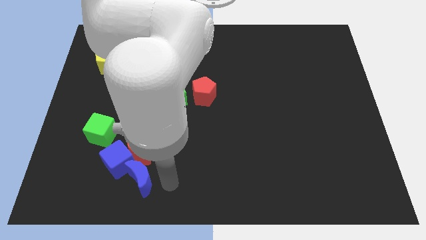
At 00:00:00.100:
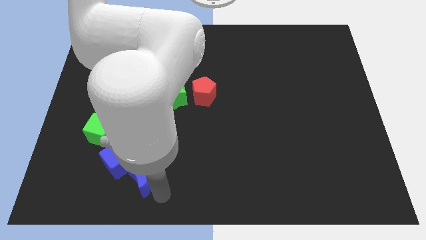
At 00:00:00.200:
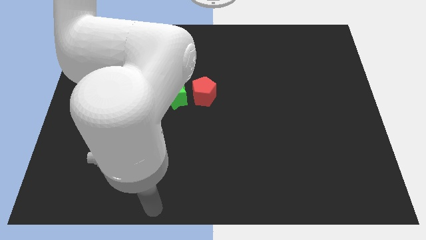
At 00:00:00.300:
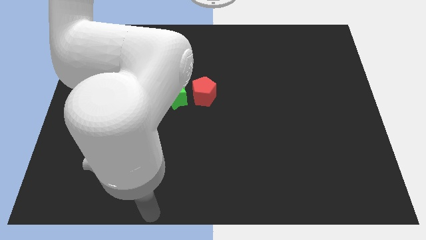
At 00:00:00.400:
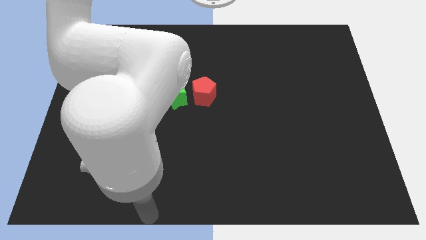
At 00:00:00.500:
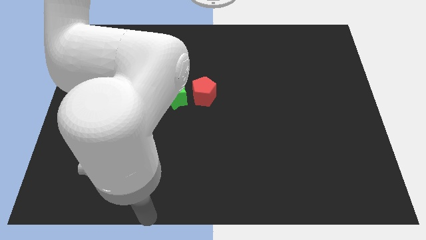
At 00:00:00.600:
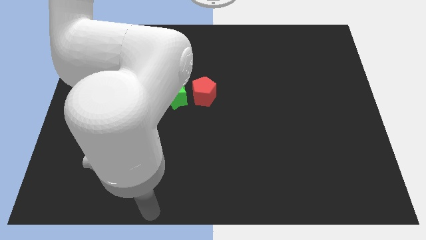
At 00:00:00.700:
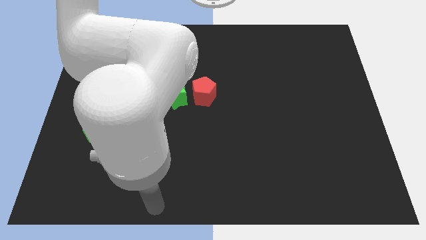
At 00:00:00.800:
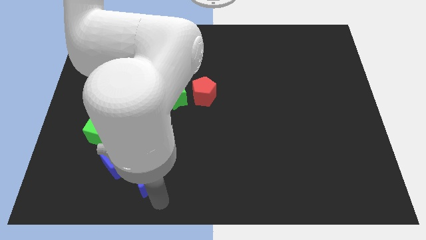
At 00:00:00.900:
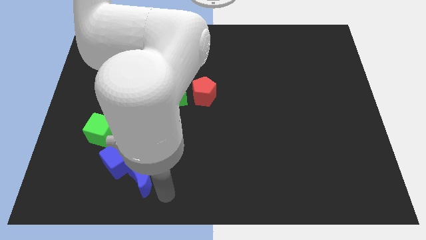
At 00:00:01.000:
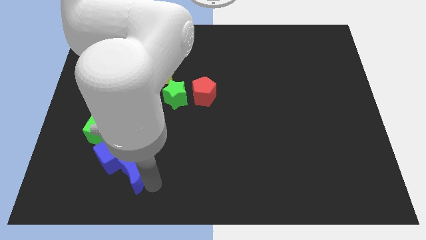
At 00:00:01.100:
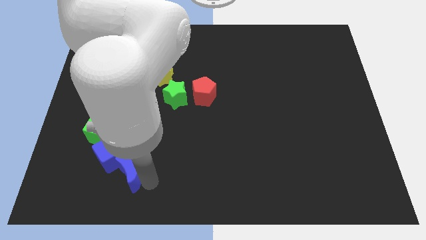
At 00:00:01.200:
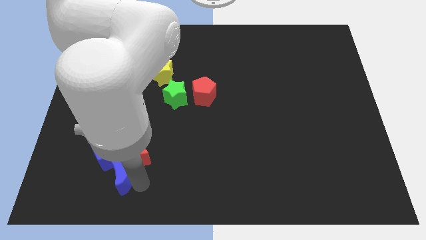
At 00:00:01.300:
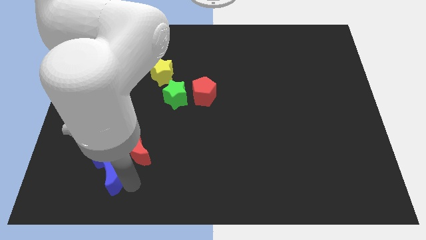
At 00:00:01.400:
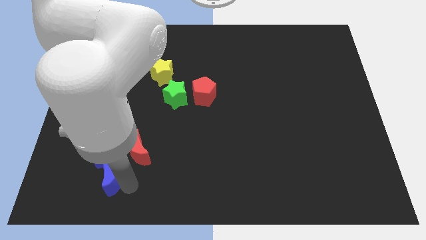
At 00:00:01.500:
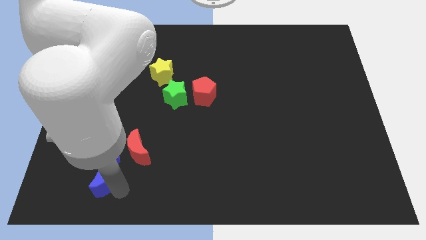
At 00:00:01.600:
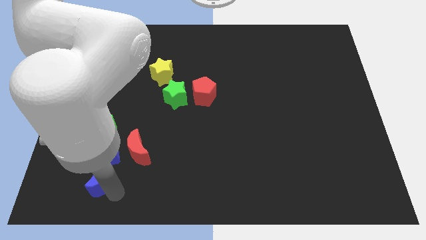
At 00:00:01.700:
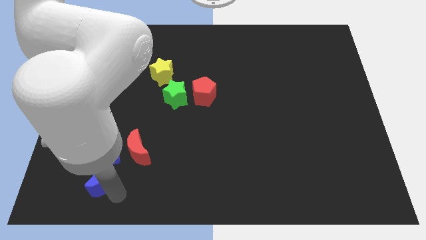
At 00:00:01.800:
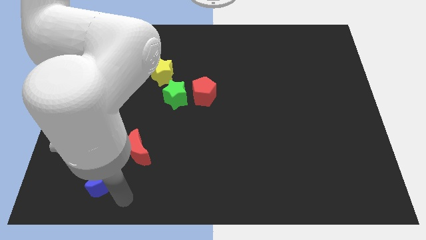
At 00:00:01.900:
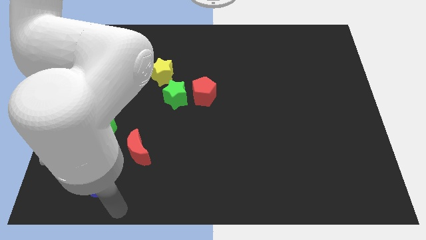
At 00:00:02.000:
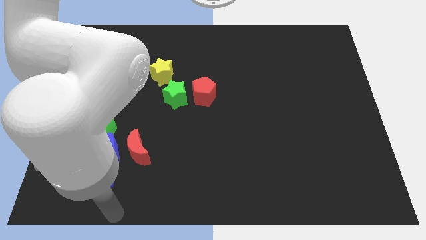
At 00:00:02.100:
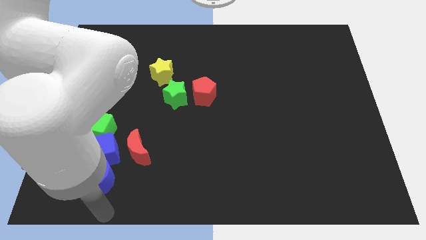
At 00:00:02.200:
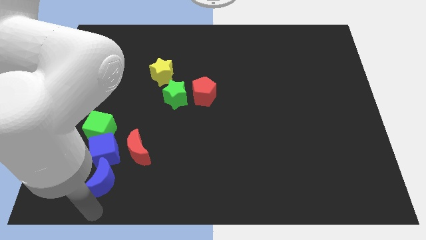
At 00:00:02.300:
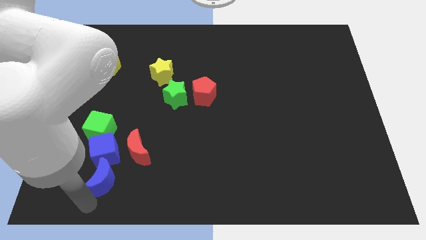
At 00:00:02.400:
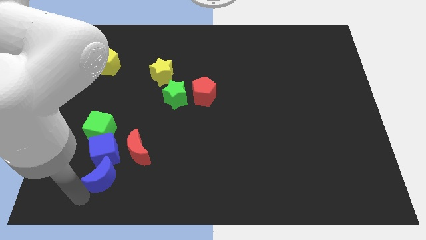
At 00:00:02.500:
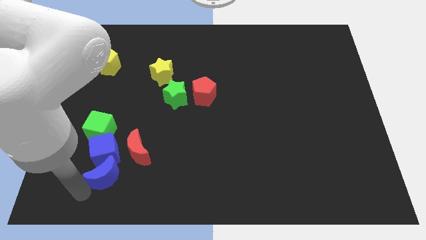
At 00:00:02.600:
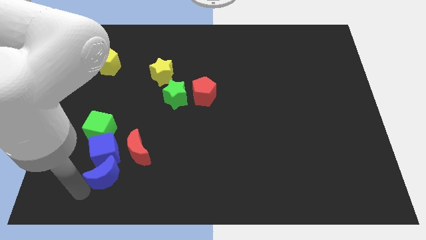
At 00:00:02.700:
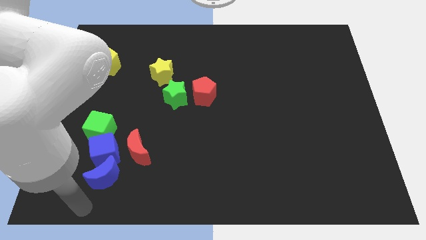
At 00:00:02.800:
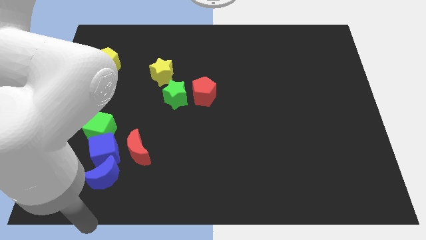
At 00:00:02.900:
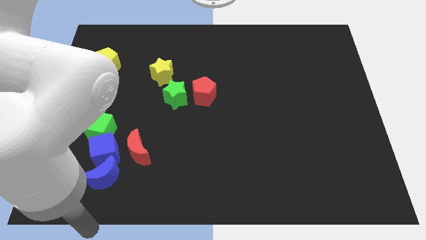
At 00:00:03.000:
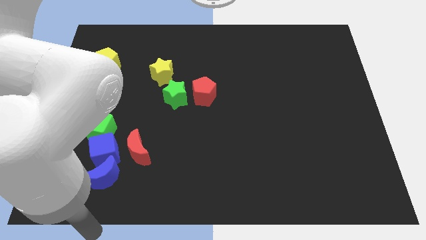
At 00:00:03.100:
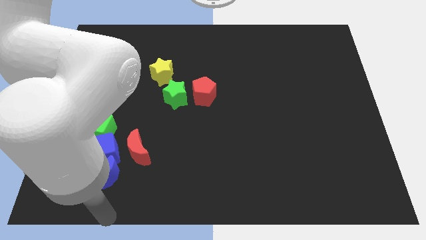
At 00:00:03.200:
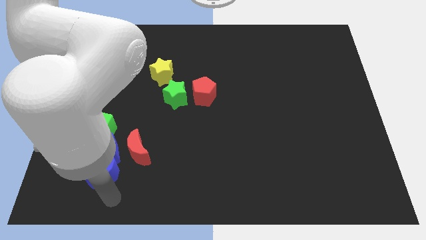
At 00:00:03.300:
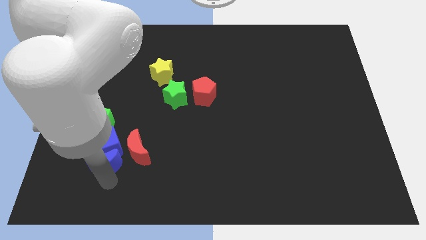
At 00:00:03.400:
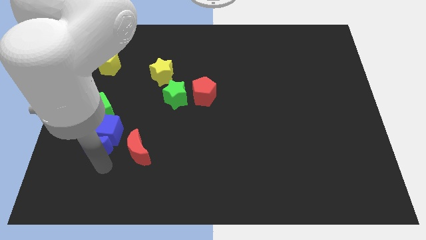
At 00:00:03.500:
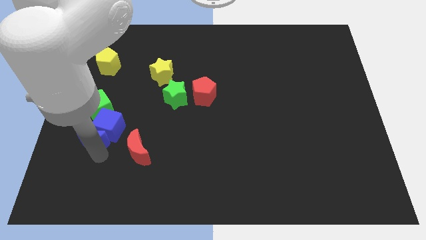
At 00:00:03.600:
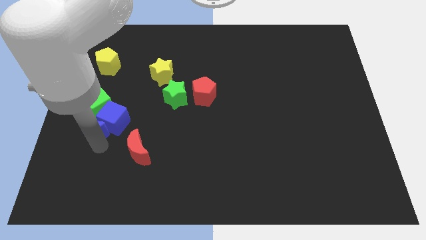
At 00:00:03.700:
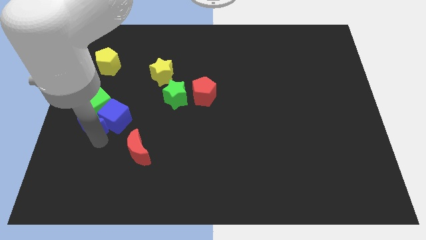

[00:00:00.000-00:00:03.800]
push the green cube and the blue cube with the blue crescent towards the left center of the board

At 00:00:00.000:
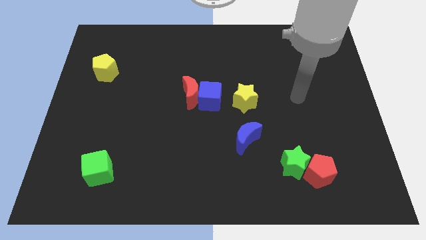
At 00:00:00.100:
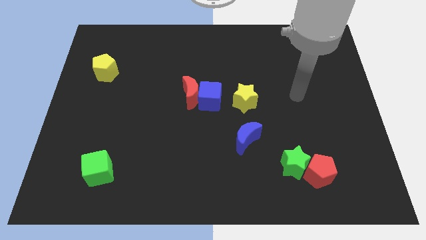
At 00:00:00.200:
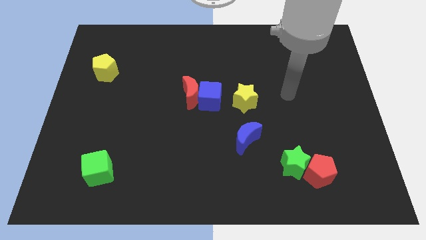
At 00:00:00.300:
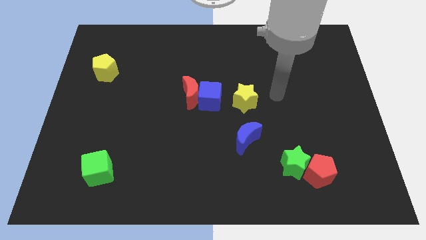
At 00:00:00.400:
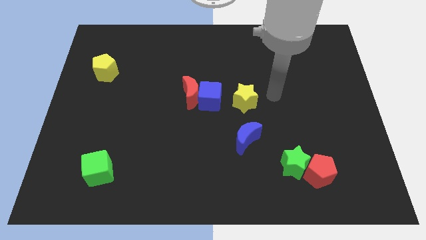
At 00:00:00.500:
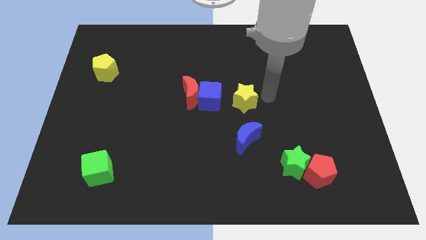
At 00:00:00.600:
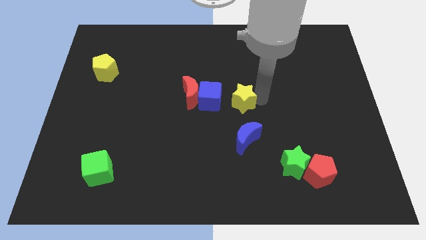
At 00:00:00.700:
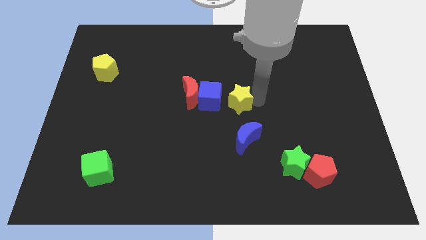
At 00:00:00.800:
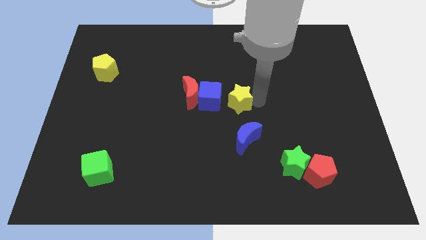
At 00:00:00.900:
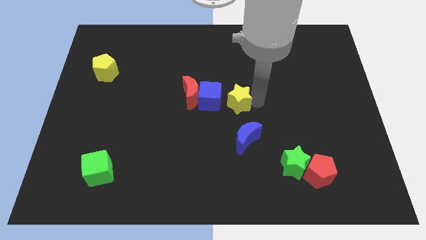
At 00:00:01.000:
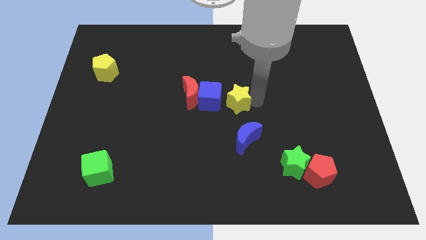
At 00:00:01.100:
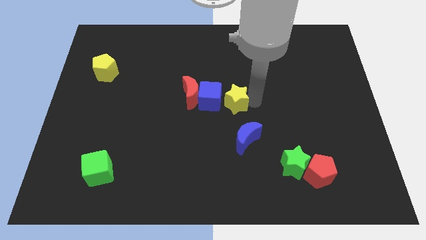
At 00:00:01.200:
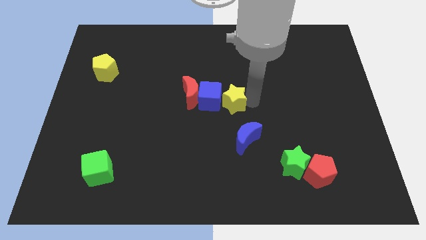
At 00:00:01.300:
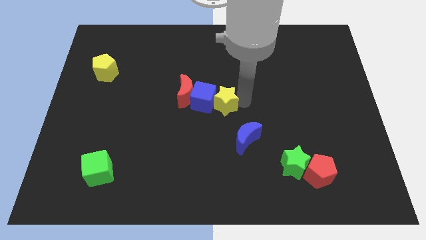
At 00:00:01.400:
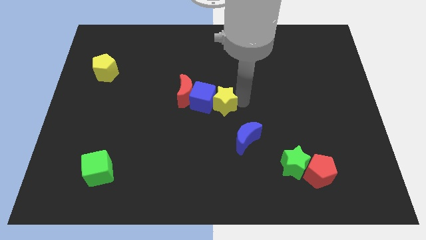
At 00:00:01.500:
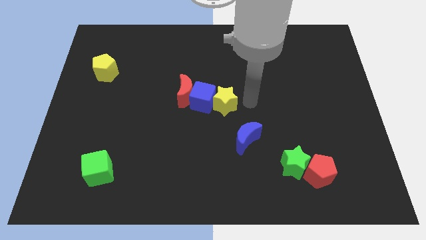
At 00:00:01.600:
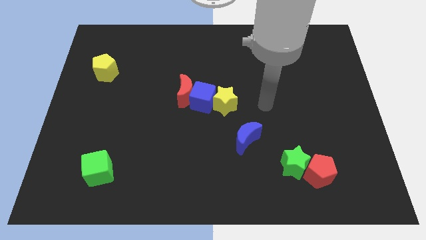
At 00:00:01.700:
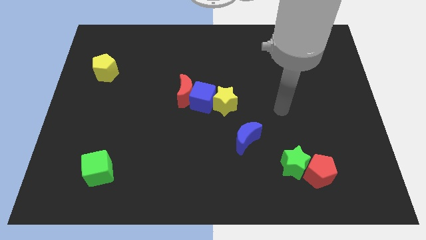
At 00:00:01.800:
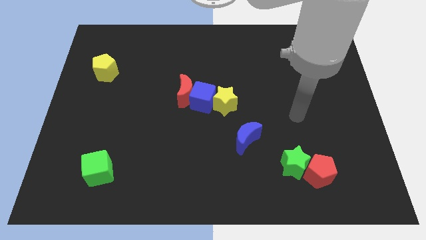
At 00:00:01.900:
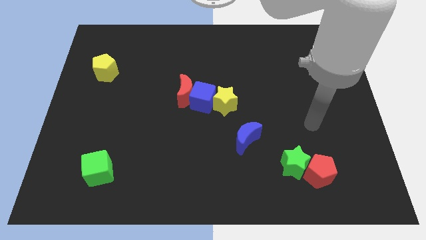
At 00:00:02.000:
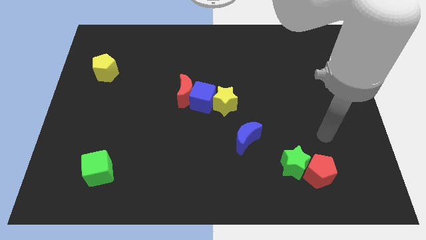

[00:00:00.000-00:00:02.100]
push yellow star into blue cube

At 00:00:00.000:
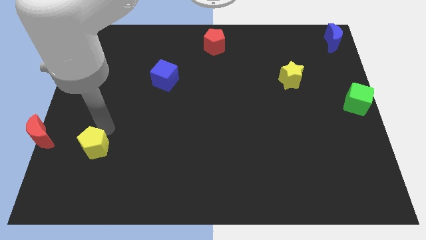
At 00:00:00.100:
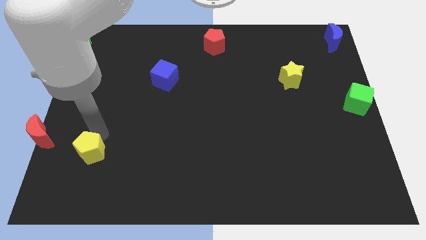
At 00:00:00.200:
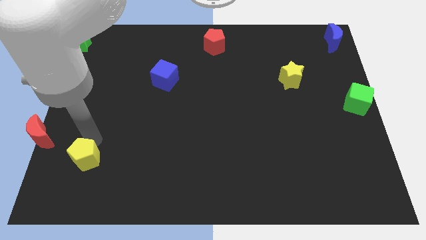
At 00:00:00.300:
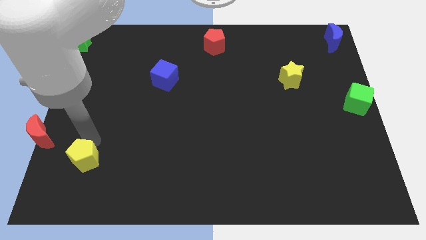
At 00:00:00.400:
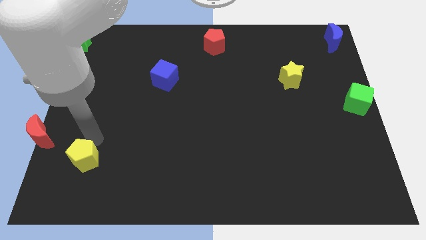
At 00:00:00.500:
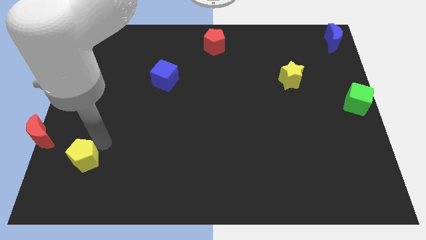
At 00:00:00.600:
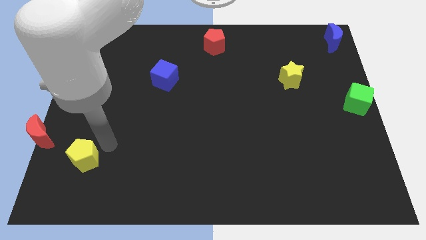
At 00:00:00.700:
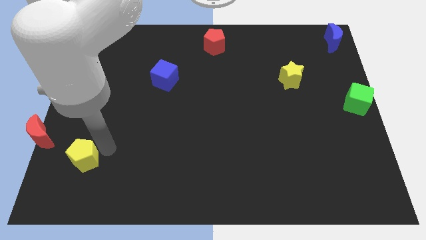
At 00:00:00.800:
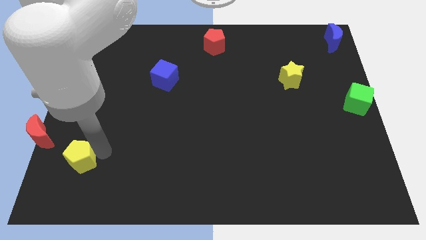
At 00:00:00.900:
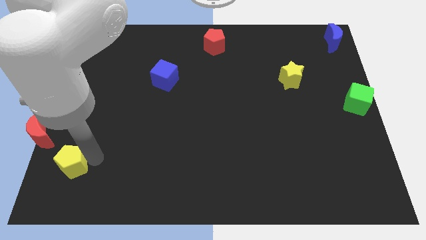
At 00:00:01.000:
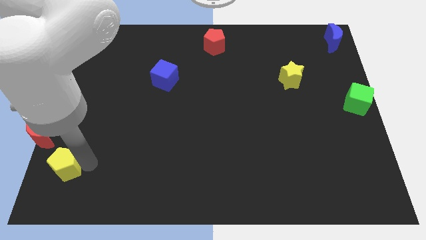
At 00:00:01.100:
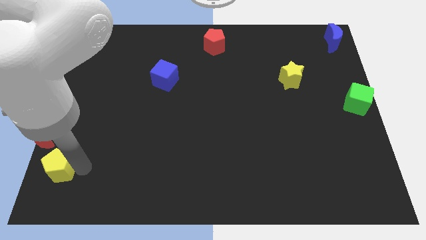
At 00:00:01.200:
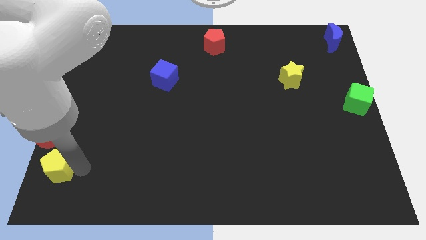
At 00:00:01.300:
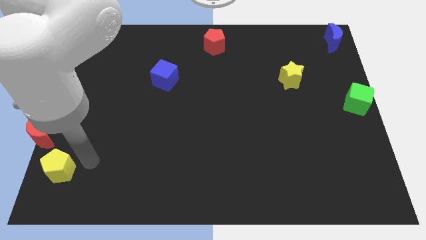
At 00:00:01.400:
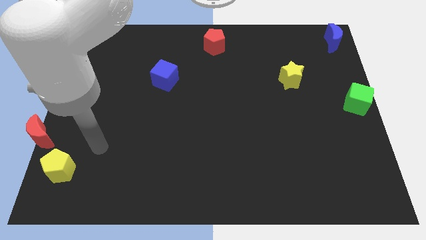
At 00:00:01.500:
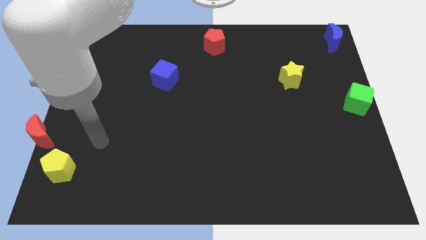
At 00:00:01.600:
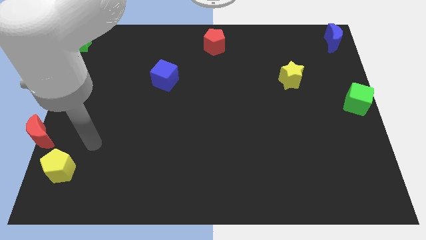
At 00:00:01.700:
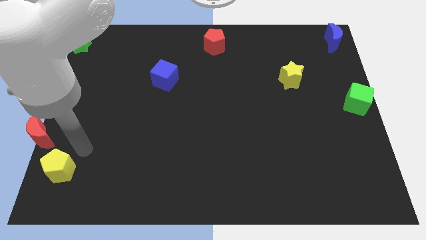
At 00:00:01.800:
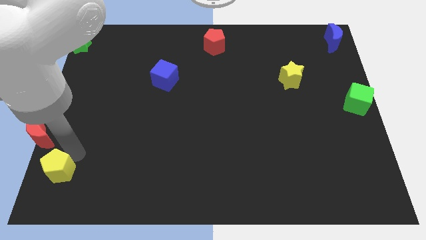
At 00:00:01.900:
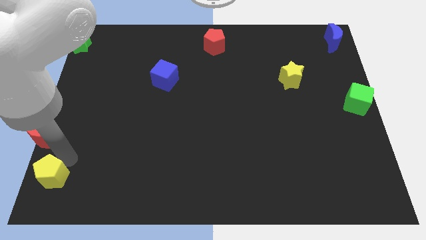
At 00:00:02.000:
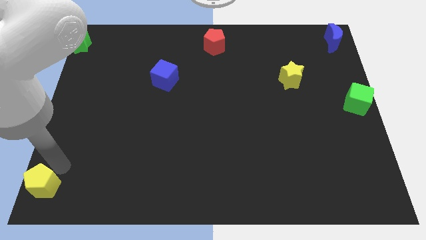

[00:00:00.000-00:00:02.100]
move yellow pentagon towards the bottom left corner of the board

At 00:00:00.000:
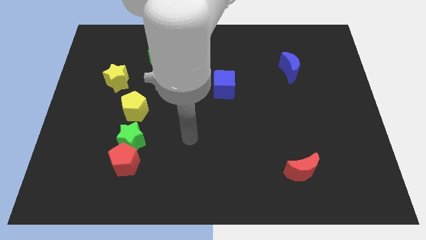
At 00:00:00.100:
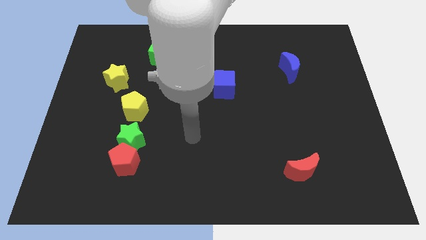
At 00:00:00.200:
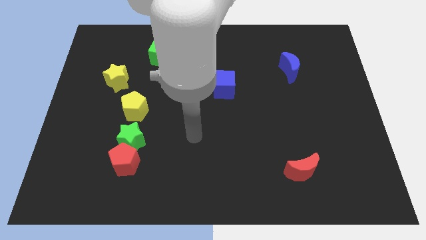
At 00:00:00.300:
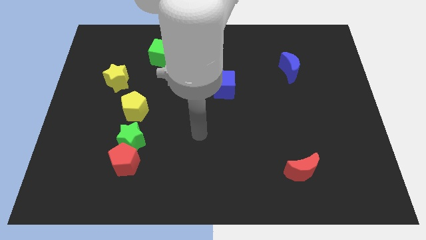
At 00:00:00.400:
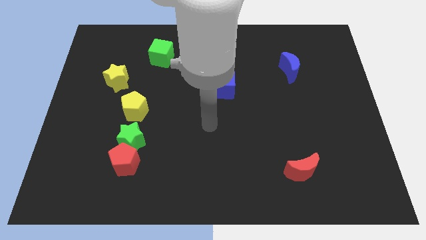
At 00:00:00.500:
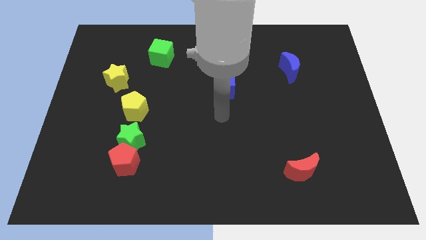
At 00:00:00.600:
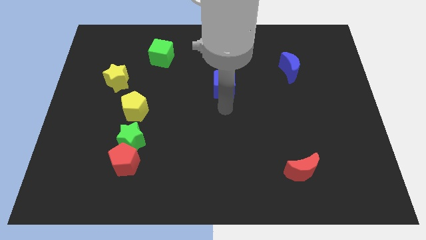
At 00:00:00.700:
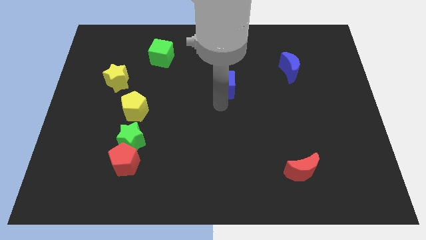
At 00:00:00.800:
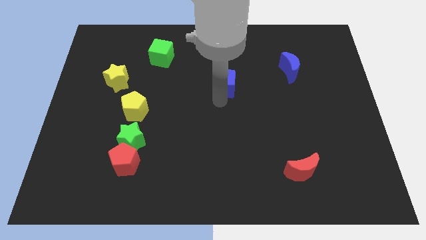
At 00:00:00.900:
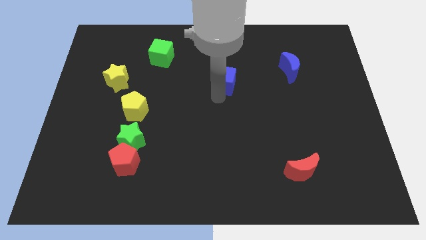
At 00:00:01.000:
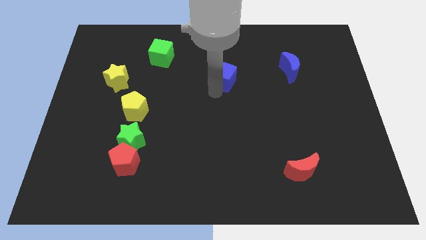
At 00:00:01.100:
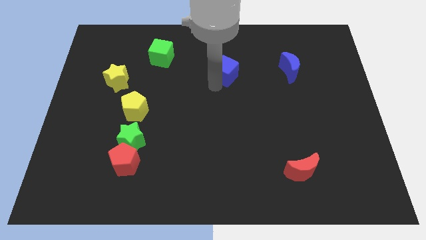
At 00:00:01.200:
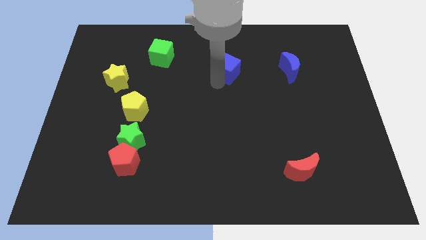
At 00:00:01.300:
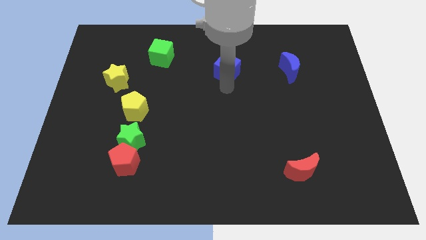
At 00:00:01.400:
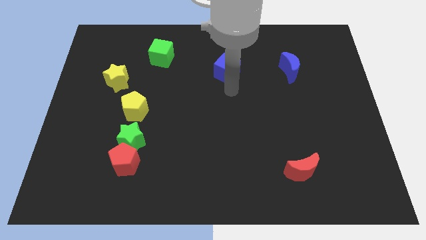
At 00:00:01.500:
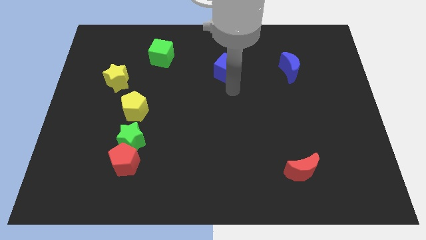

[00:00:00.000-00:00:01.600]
move your arm near blue cube
